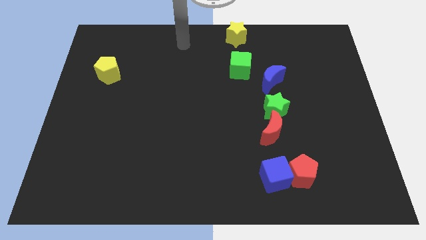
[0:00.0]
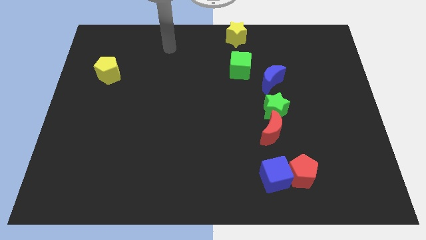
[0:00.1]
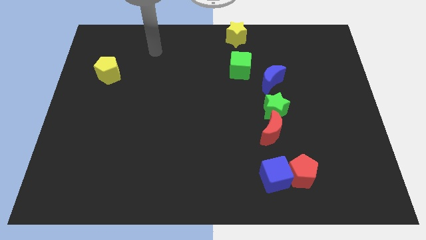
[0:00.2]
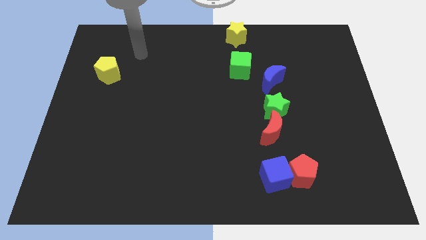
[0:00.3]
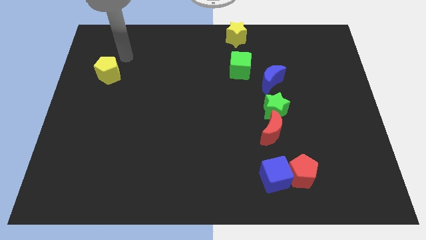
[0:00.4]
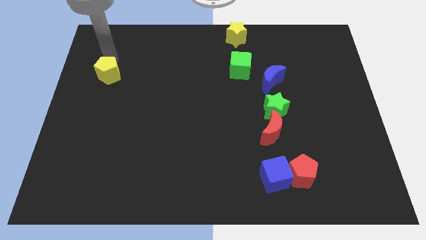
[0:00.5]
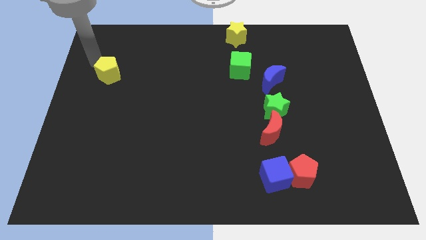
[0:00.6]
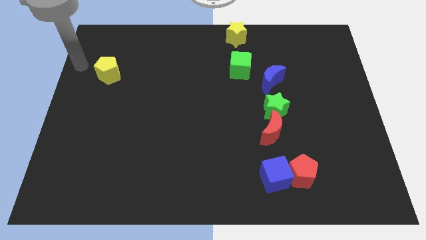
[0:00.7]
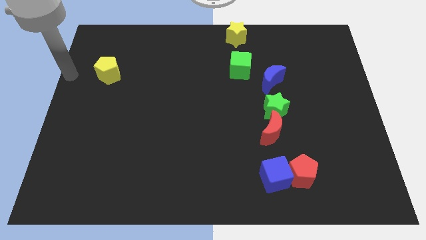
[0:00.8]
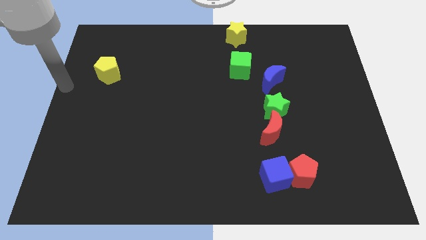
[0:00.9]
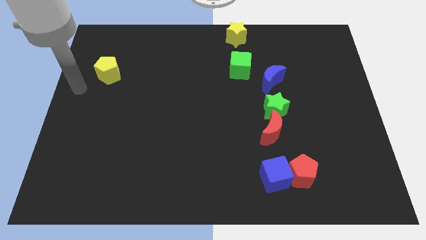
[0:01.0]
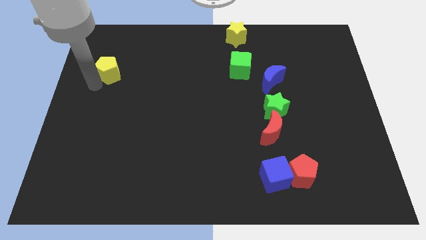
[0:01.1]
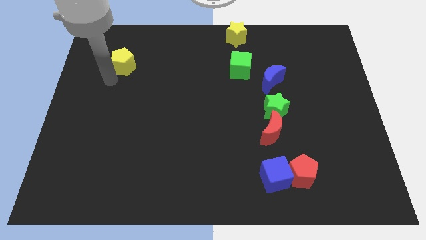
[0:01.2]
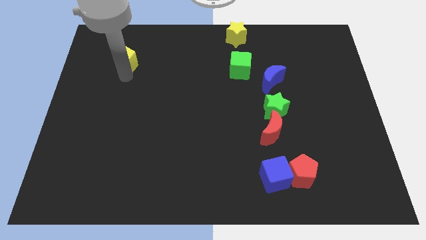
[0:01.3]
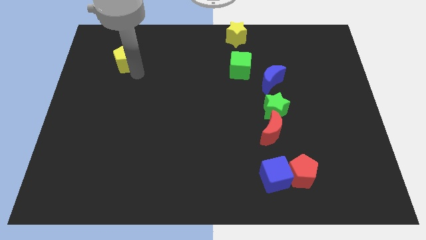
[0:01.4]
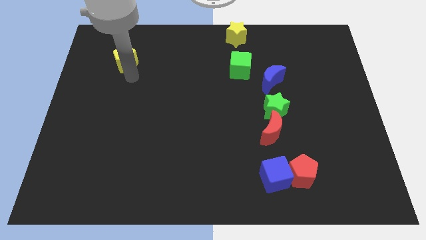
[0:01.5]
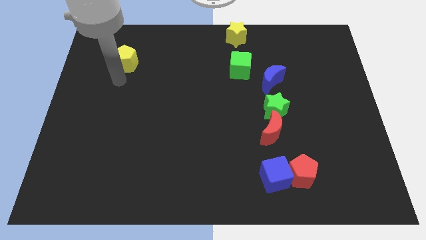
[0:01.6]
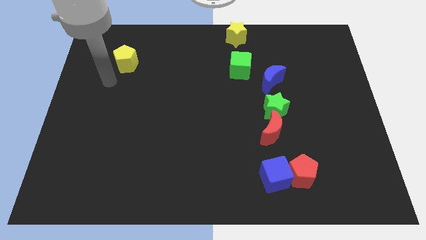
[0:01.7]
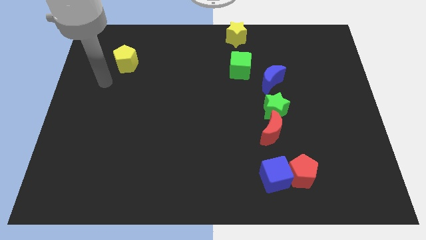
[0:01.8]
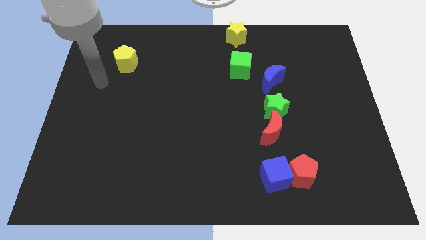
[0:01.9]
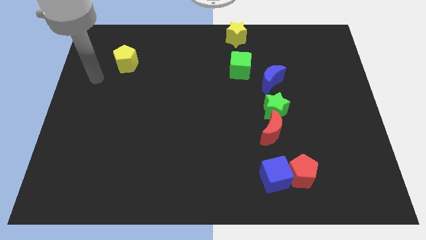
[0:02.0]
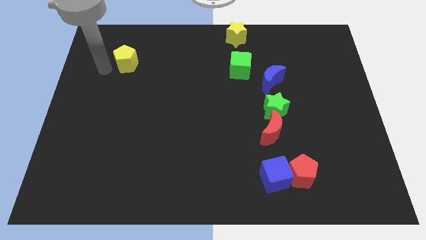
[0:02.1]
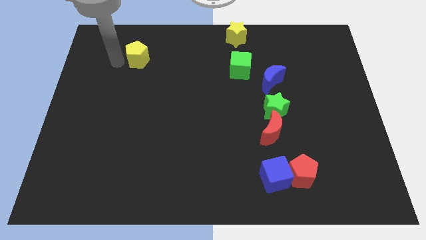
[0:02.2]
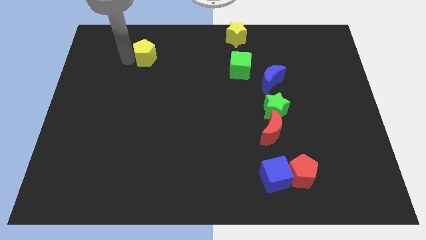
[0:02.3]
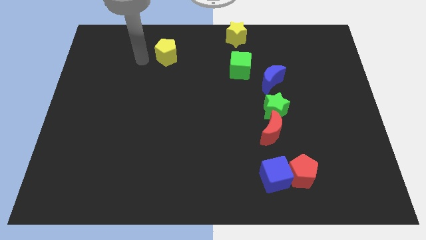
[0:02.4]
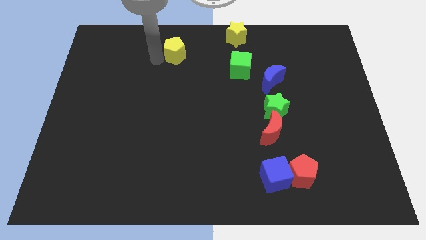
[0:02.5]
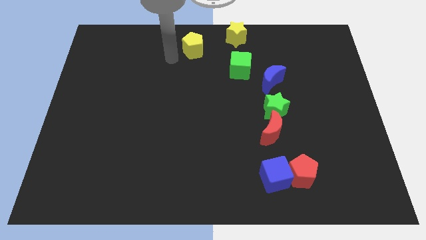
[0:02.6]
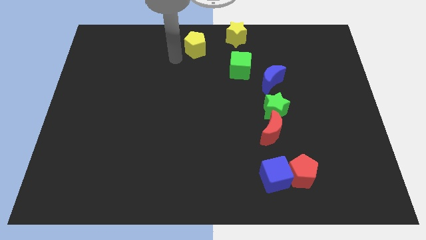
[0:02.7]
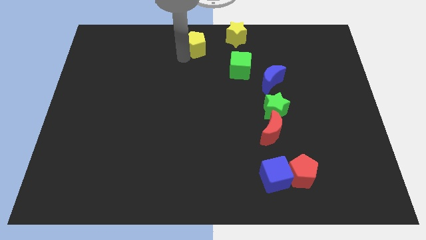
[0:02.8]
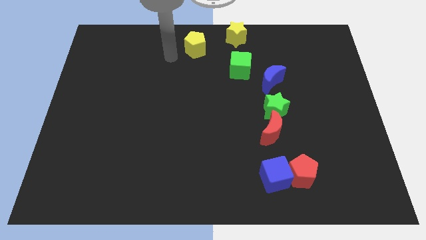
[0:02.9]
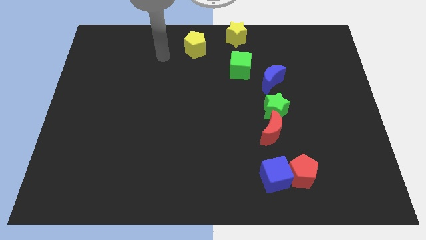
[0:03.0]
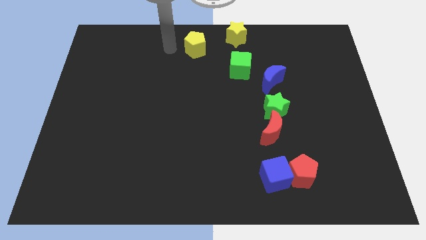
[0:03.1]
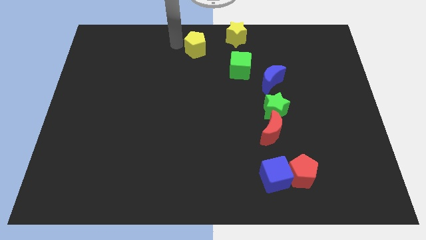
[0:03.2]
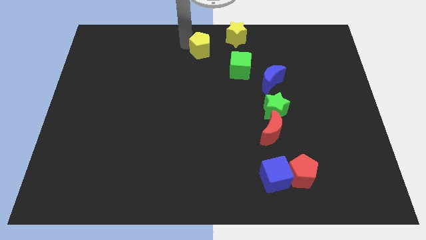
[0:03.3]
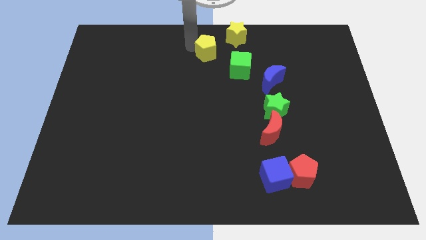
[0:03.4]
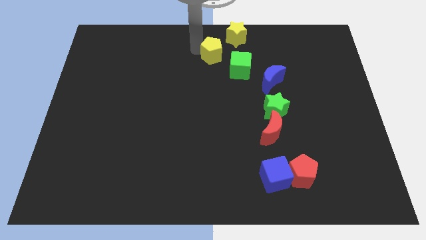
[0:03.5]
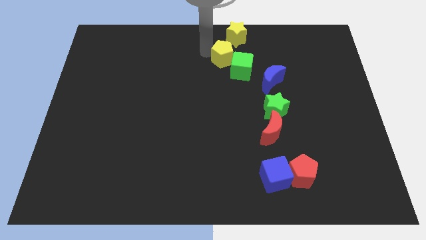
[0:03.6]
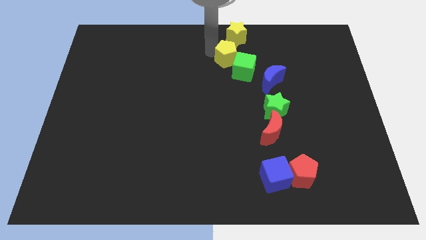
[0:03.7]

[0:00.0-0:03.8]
move yellow pentagon left above green cube

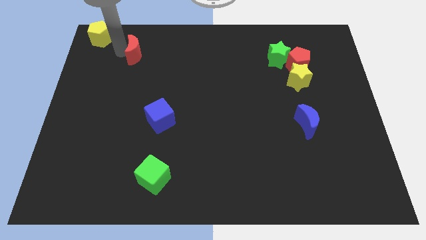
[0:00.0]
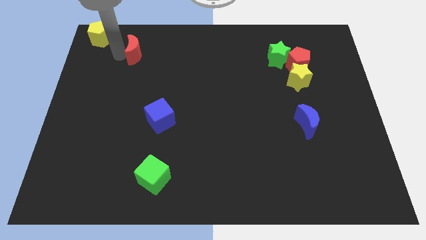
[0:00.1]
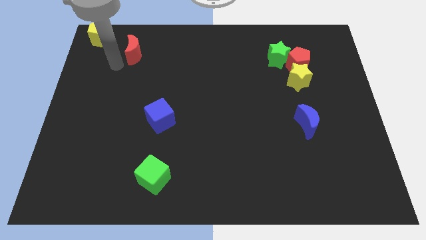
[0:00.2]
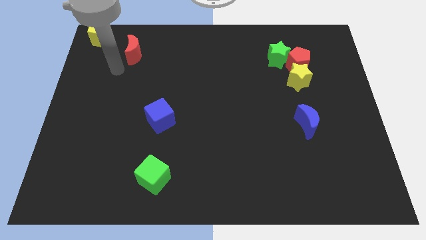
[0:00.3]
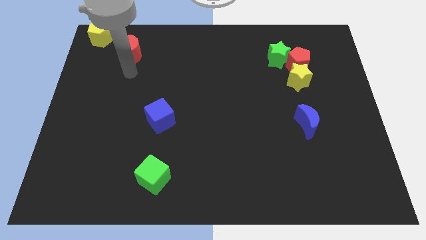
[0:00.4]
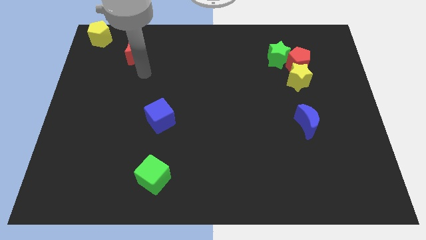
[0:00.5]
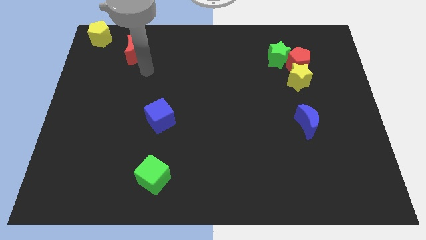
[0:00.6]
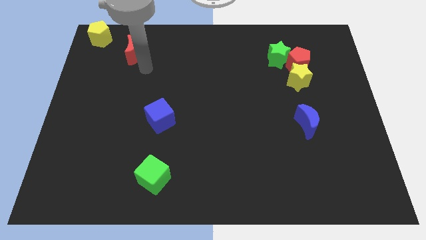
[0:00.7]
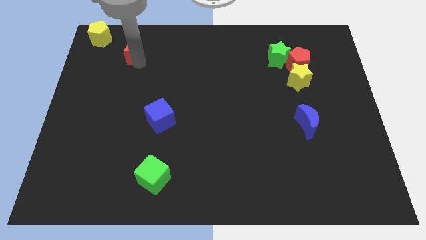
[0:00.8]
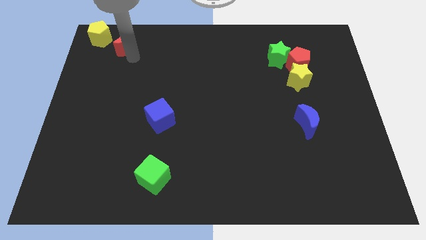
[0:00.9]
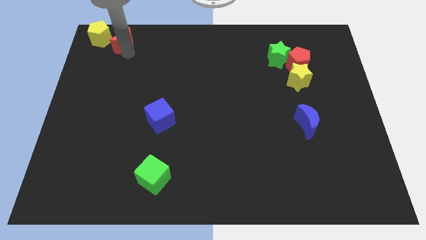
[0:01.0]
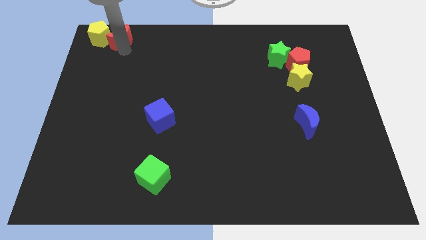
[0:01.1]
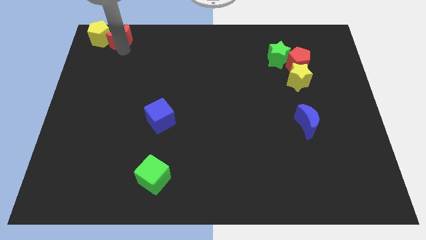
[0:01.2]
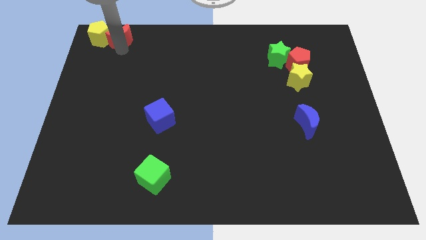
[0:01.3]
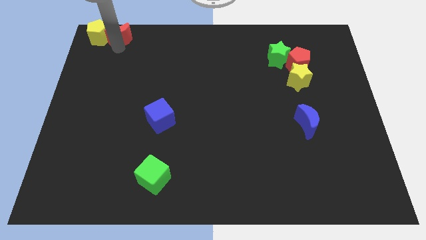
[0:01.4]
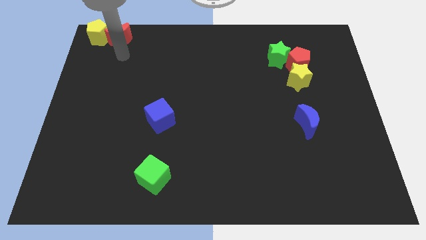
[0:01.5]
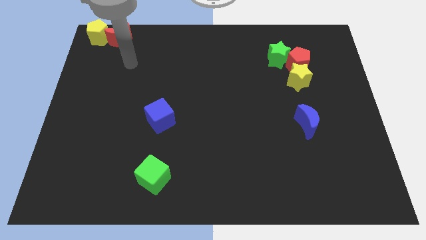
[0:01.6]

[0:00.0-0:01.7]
push the red crescent into the yellow pentagon

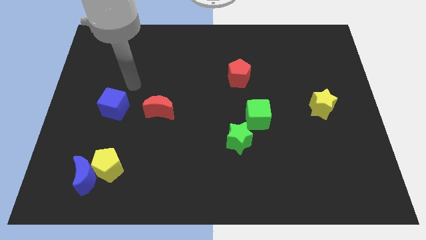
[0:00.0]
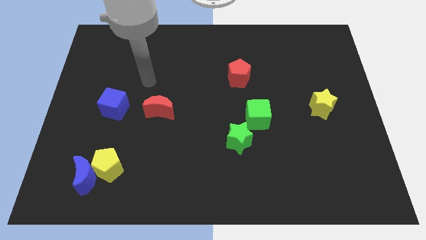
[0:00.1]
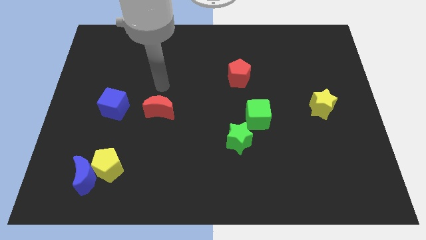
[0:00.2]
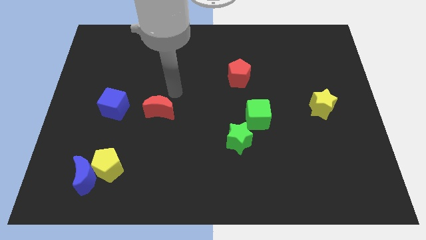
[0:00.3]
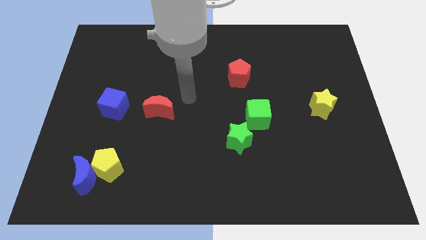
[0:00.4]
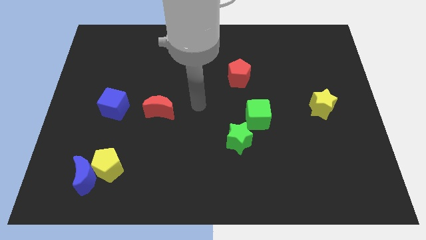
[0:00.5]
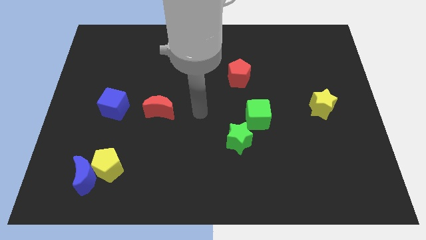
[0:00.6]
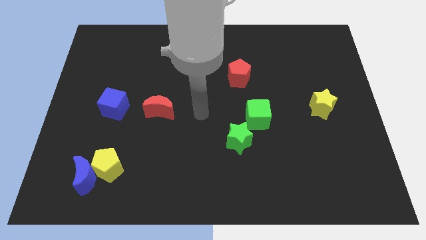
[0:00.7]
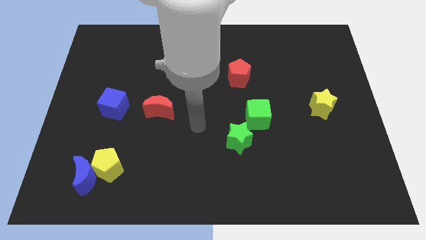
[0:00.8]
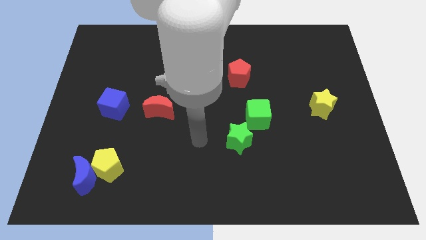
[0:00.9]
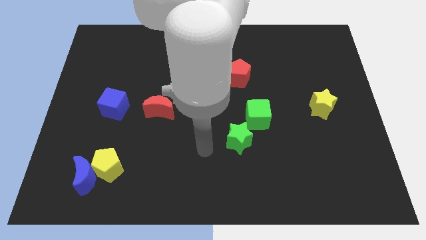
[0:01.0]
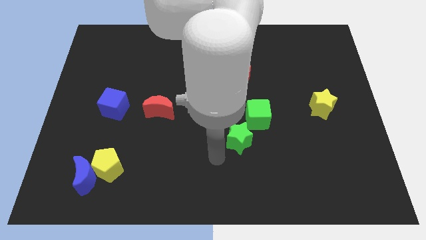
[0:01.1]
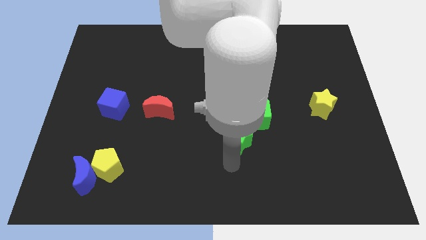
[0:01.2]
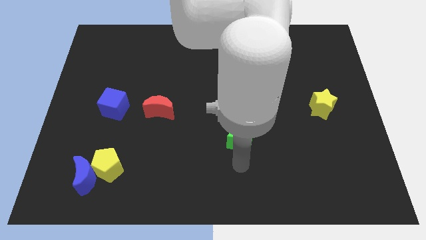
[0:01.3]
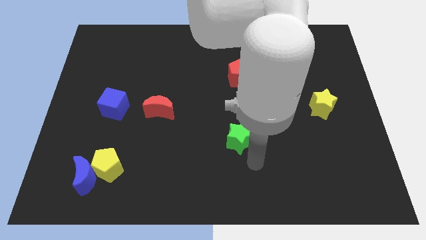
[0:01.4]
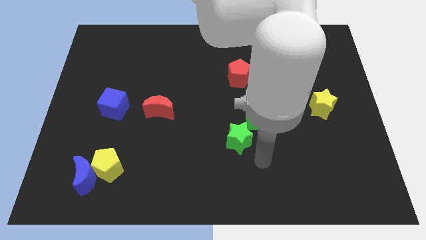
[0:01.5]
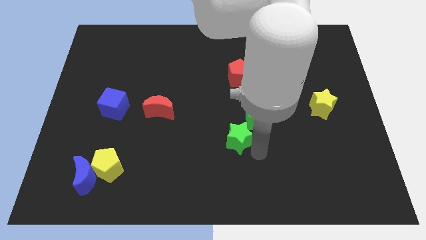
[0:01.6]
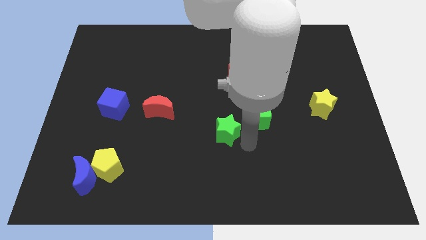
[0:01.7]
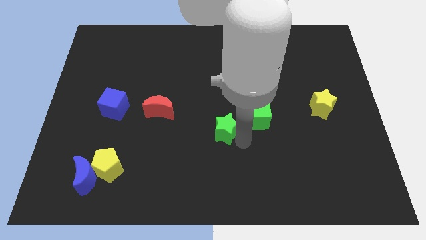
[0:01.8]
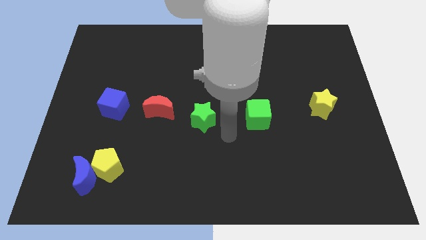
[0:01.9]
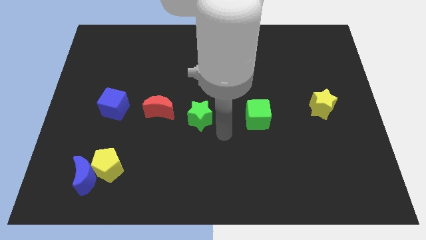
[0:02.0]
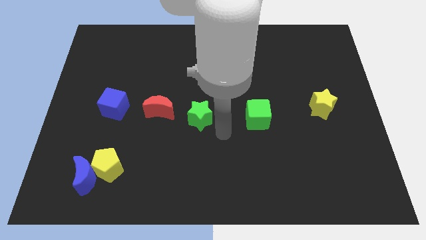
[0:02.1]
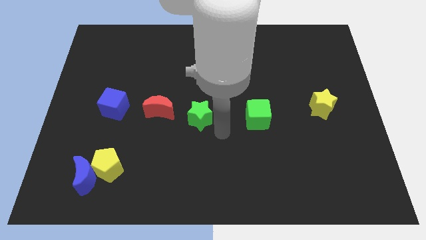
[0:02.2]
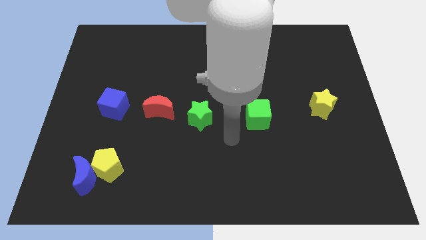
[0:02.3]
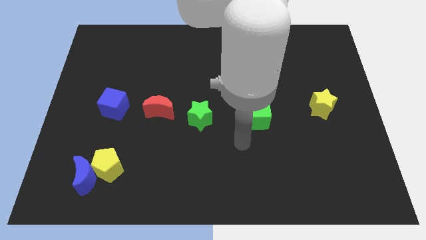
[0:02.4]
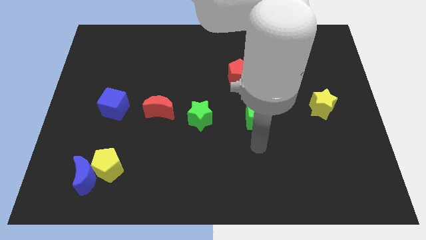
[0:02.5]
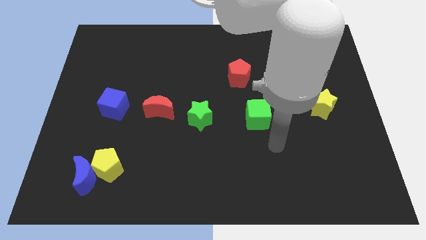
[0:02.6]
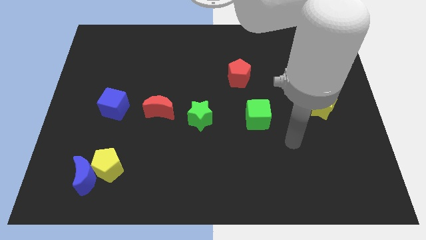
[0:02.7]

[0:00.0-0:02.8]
move the green star to the right of the red crescent

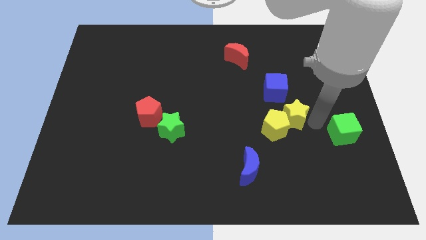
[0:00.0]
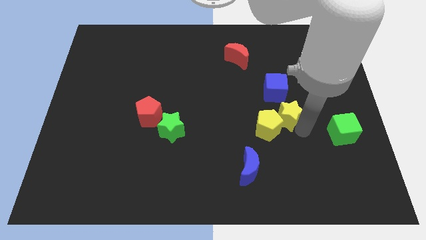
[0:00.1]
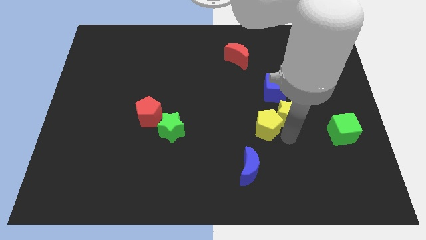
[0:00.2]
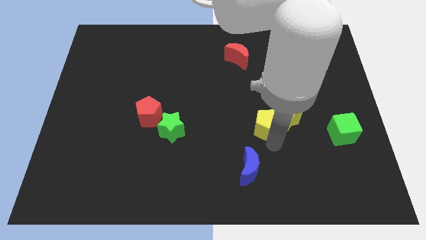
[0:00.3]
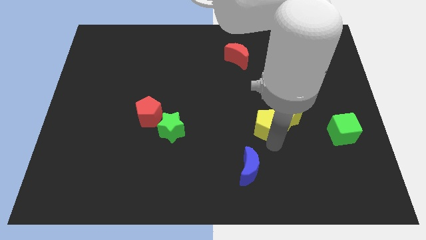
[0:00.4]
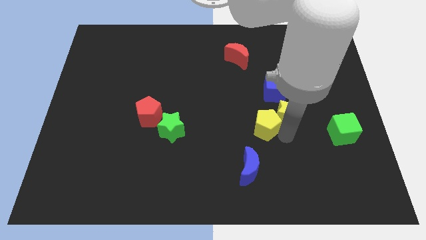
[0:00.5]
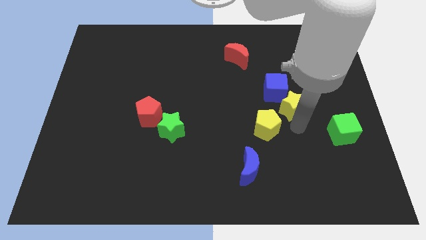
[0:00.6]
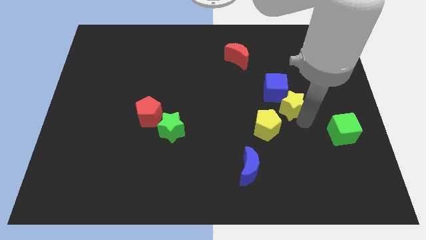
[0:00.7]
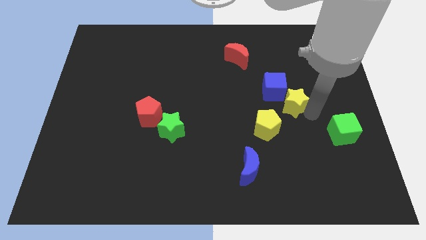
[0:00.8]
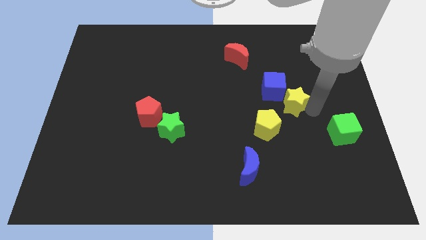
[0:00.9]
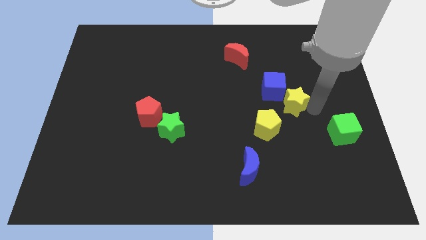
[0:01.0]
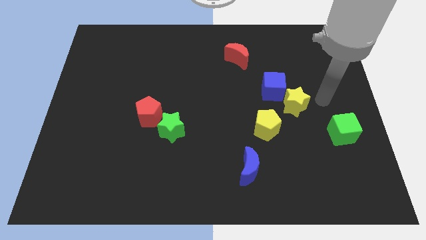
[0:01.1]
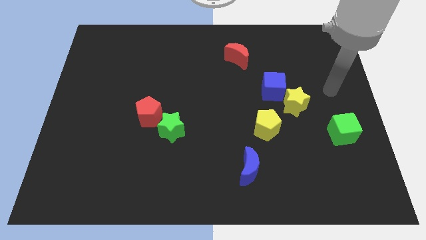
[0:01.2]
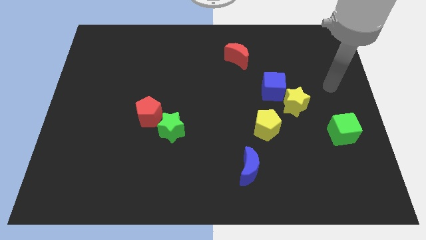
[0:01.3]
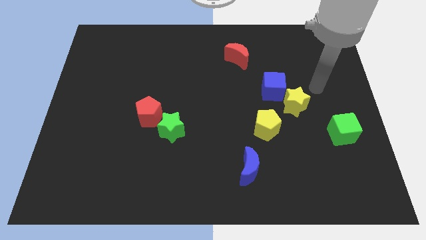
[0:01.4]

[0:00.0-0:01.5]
separate the two yellow blocks
